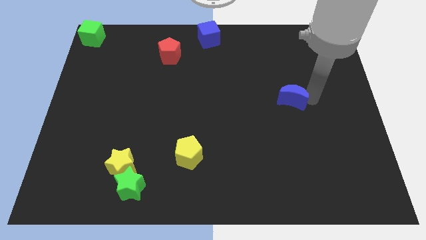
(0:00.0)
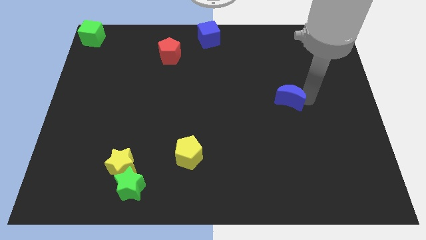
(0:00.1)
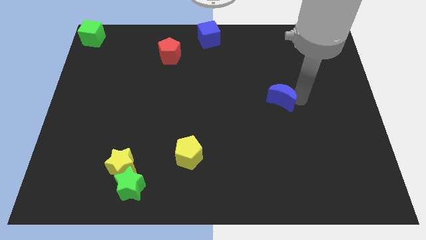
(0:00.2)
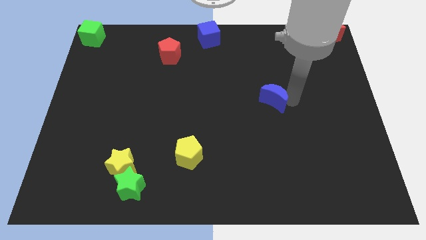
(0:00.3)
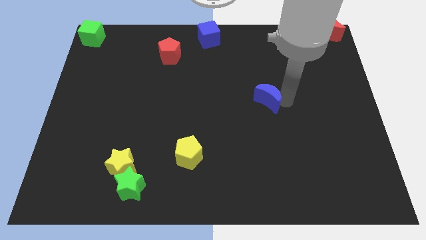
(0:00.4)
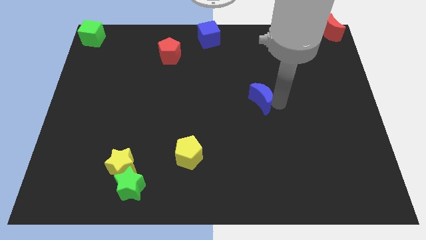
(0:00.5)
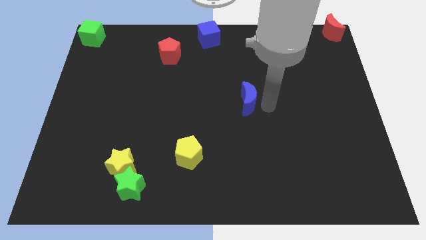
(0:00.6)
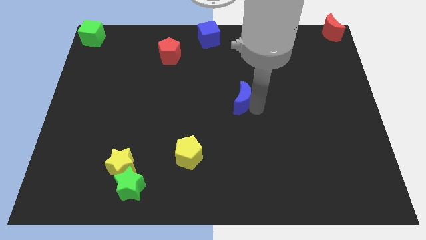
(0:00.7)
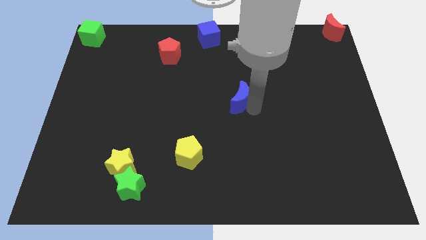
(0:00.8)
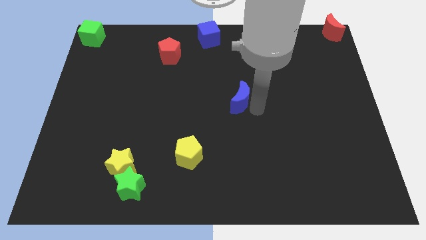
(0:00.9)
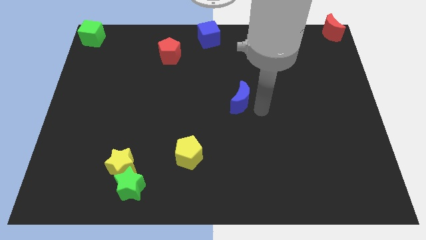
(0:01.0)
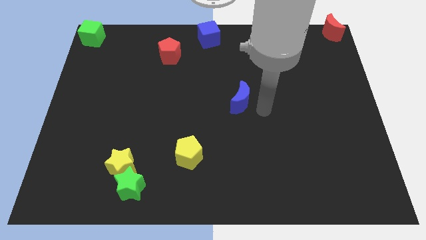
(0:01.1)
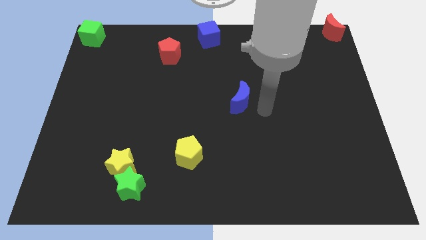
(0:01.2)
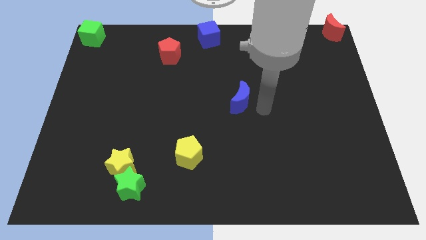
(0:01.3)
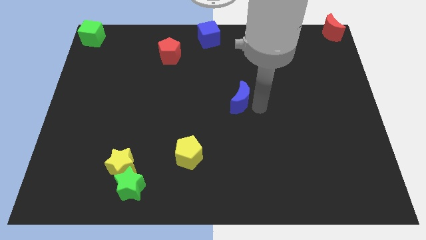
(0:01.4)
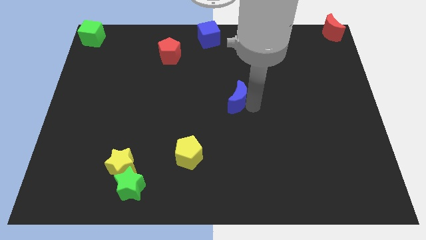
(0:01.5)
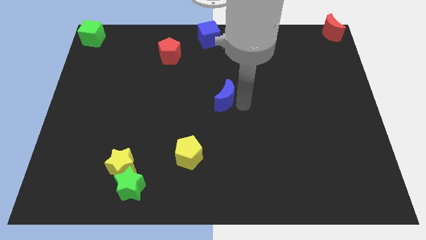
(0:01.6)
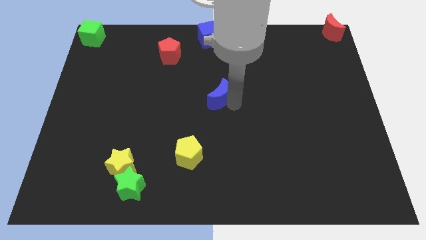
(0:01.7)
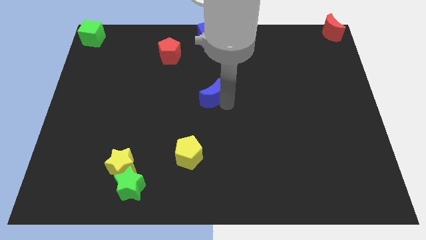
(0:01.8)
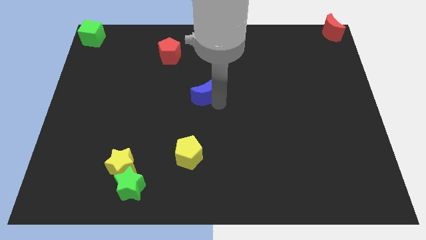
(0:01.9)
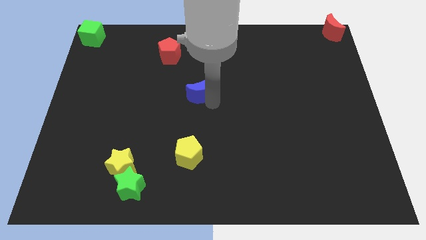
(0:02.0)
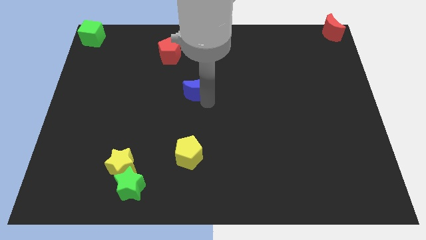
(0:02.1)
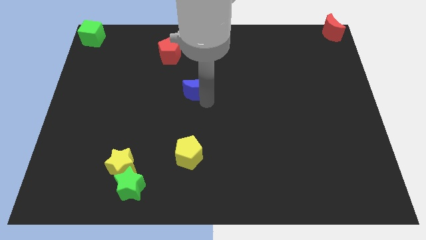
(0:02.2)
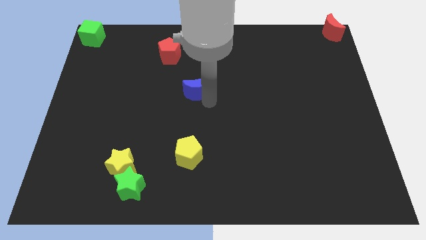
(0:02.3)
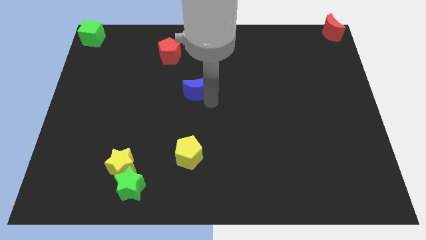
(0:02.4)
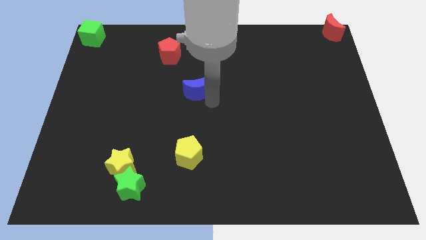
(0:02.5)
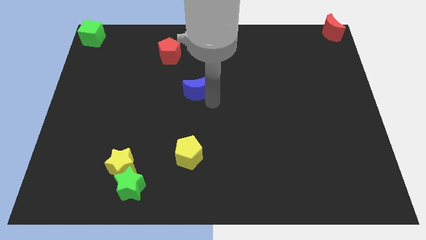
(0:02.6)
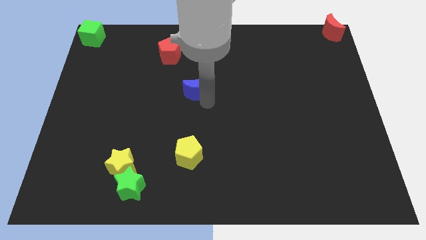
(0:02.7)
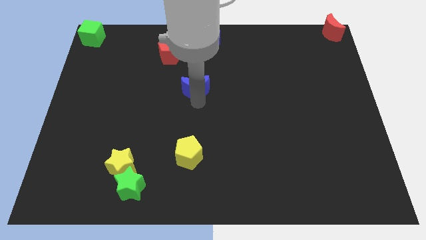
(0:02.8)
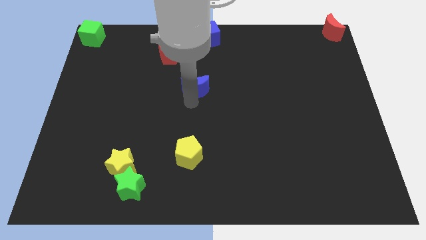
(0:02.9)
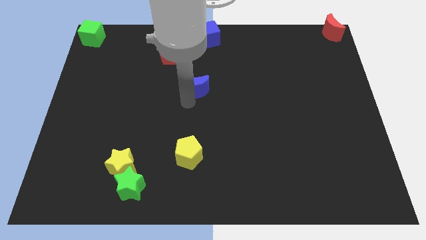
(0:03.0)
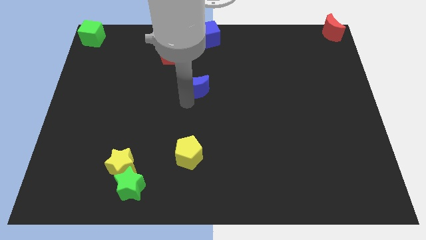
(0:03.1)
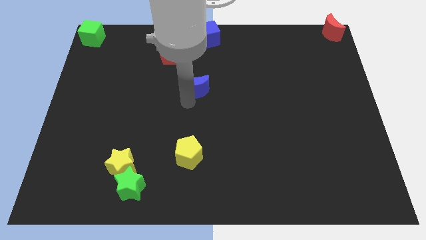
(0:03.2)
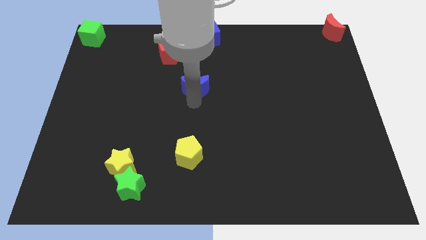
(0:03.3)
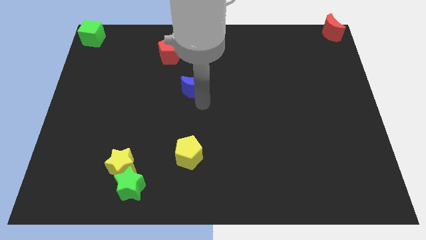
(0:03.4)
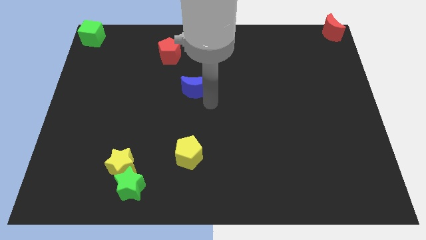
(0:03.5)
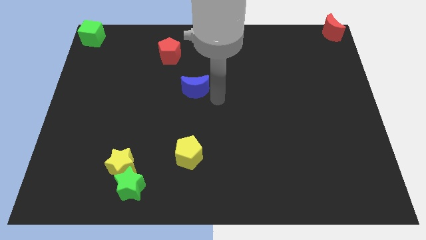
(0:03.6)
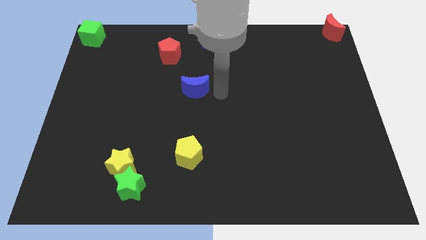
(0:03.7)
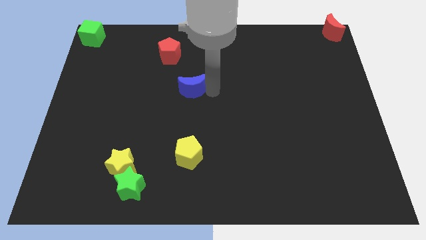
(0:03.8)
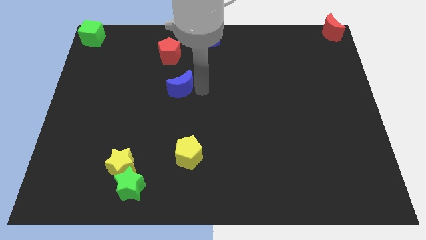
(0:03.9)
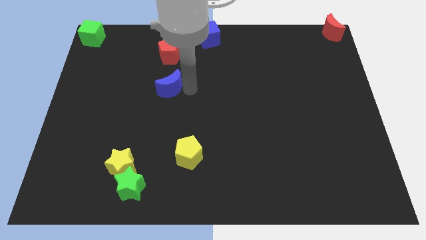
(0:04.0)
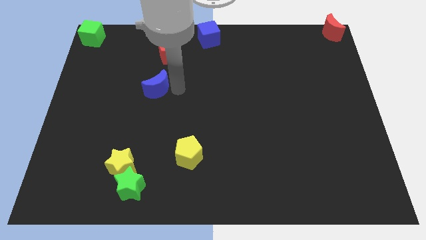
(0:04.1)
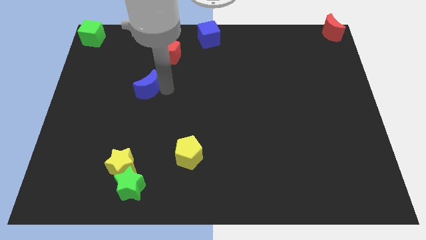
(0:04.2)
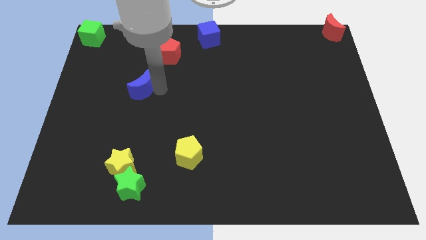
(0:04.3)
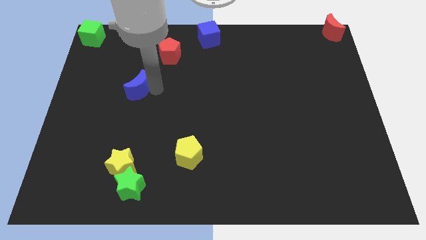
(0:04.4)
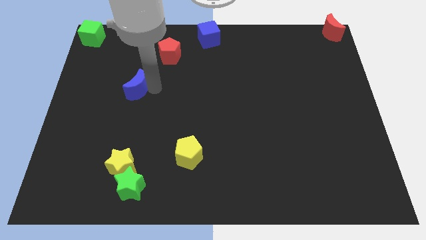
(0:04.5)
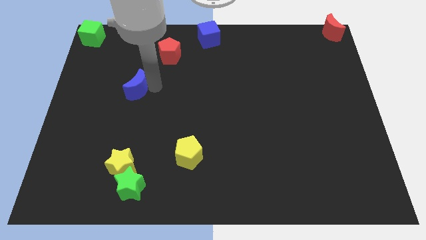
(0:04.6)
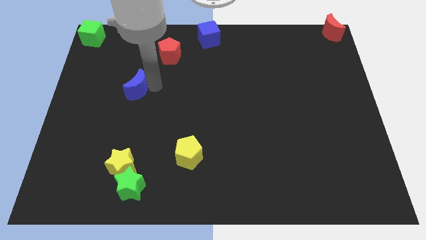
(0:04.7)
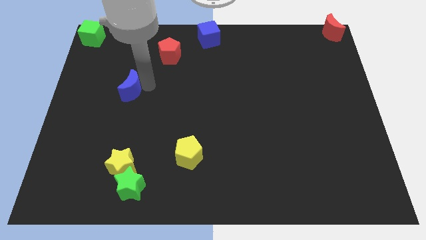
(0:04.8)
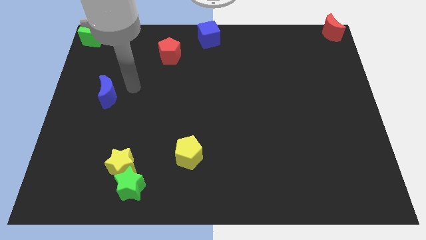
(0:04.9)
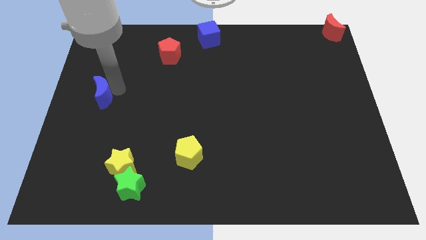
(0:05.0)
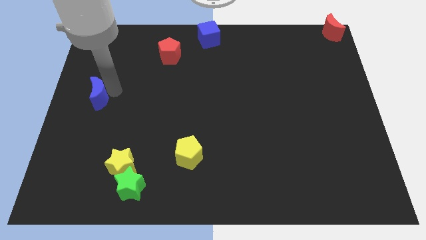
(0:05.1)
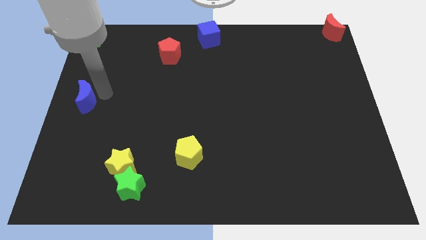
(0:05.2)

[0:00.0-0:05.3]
move blue moon to ward the left middle of the board

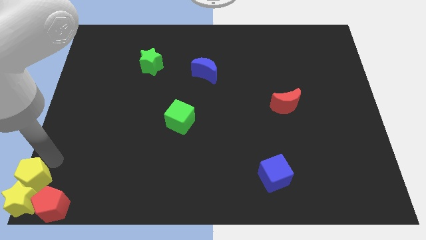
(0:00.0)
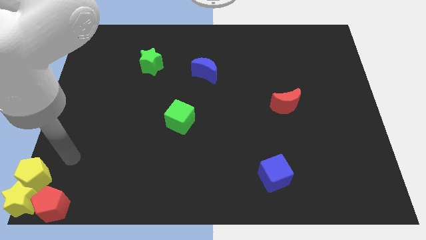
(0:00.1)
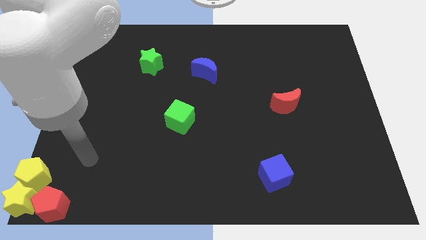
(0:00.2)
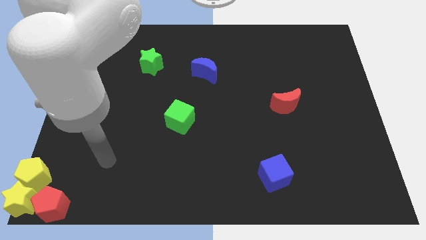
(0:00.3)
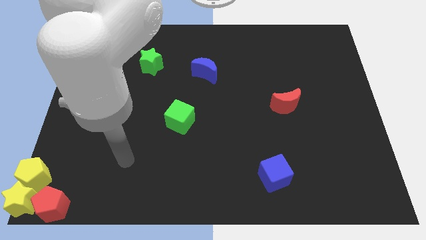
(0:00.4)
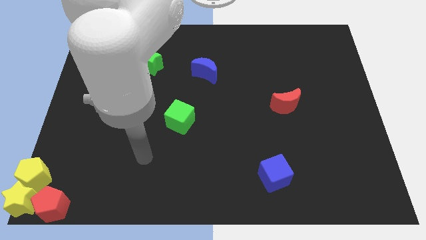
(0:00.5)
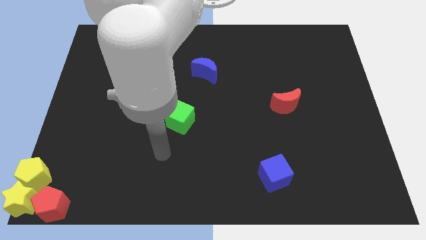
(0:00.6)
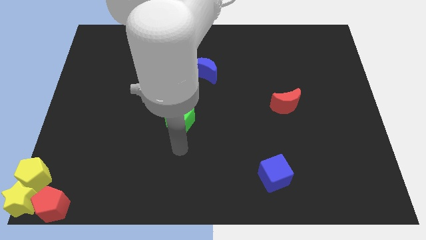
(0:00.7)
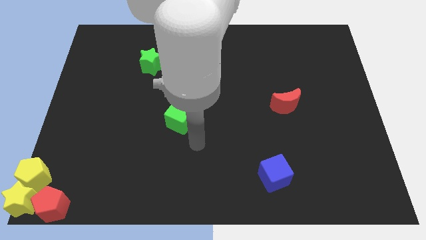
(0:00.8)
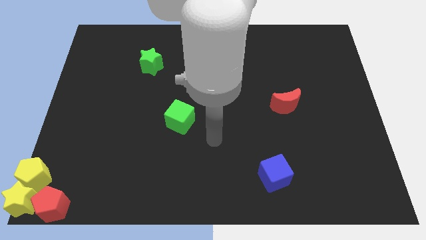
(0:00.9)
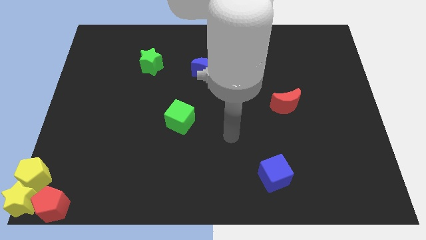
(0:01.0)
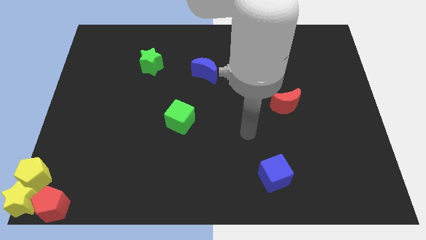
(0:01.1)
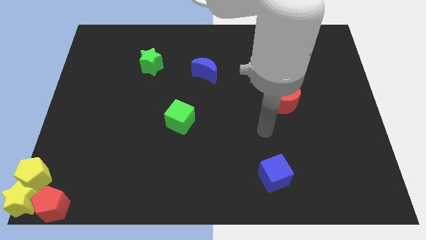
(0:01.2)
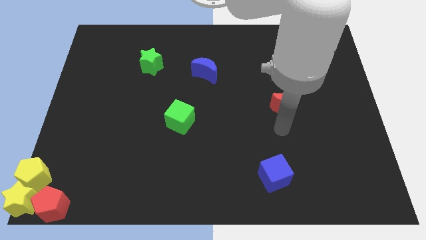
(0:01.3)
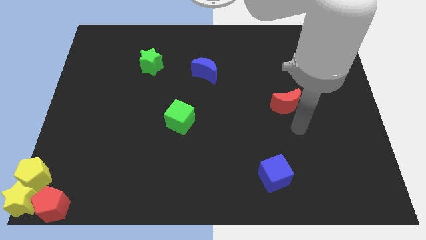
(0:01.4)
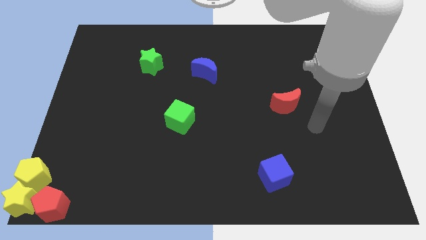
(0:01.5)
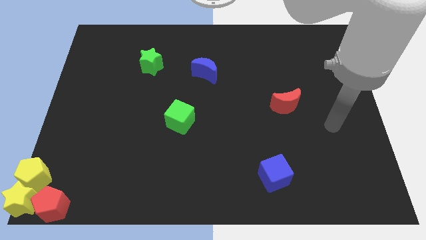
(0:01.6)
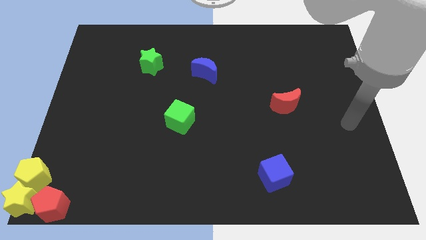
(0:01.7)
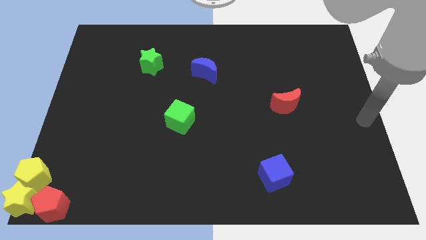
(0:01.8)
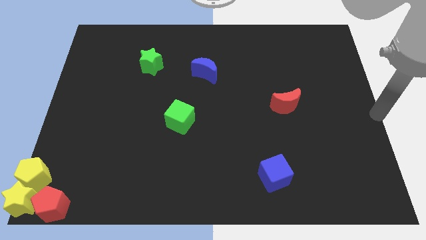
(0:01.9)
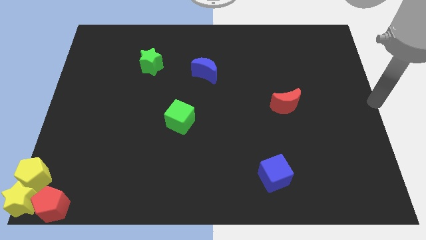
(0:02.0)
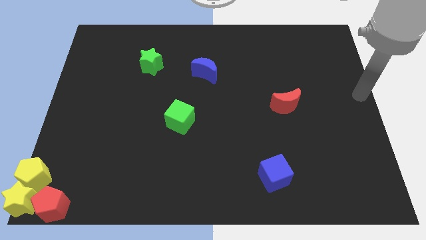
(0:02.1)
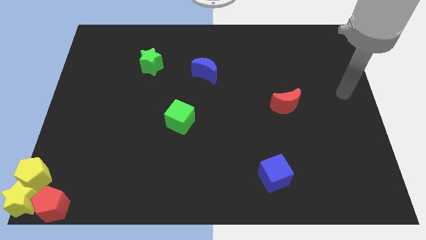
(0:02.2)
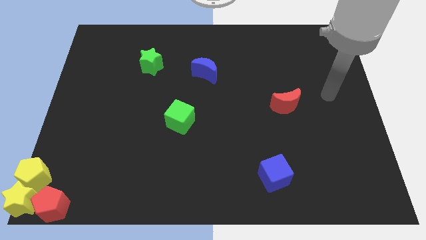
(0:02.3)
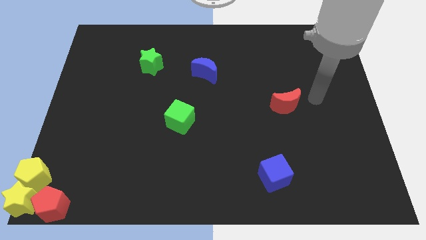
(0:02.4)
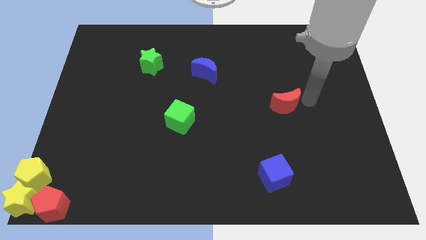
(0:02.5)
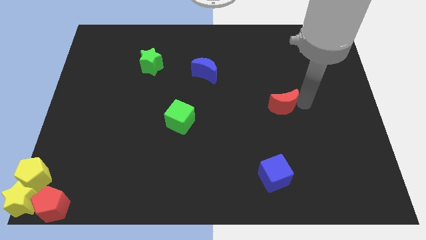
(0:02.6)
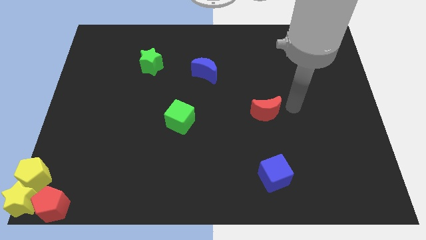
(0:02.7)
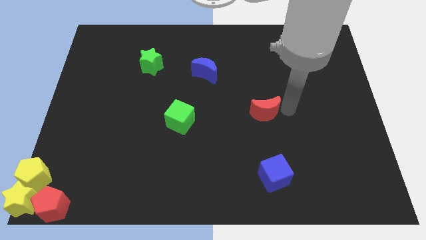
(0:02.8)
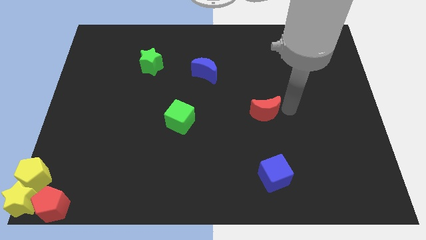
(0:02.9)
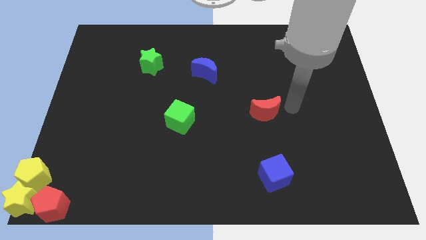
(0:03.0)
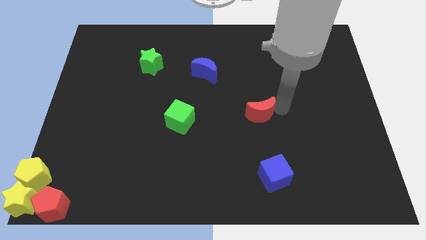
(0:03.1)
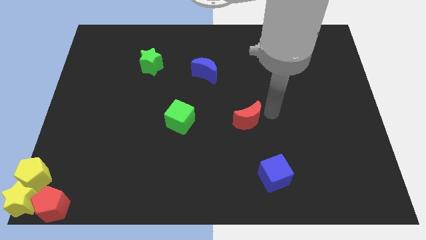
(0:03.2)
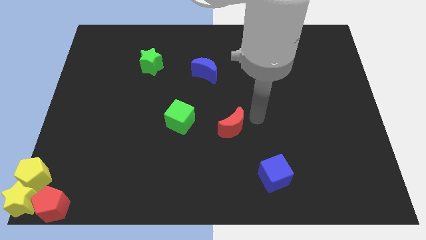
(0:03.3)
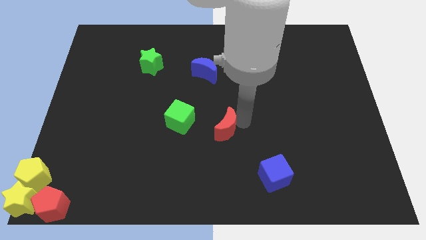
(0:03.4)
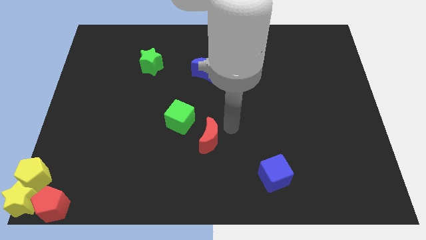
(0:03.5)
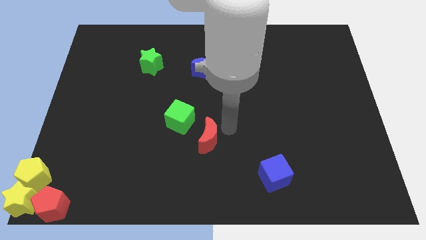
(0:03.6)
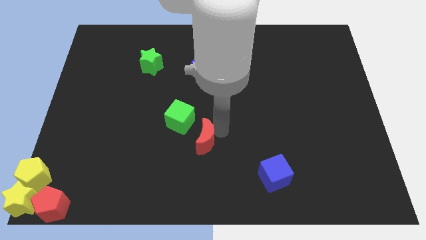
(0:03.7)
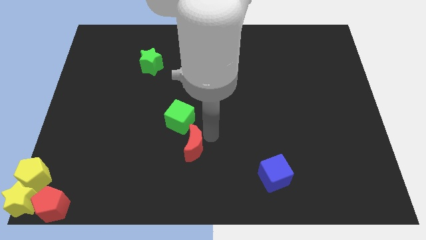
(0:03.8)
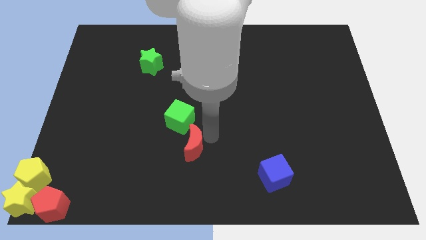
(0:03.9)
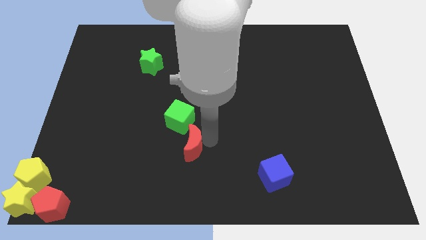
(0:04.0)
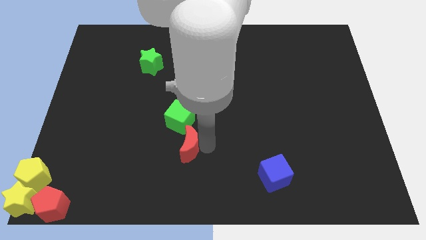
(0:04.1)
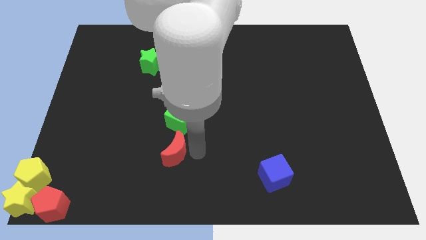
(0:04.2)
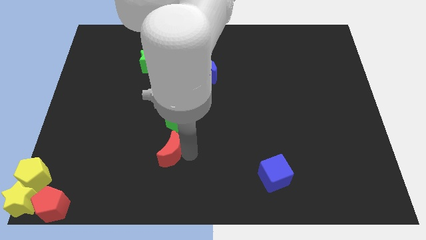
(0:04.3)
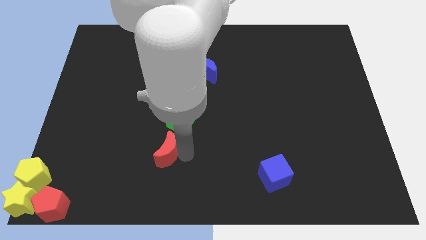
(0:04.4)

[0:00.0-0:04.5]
move the red crescent to the bottom of the green cube
